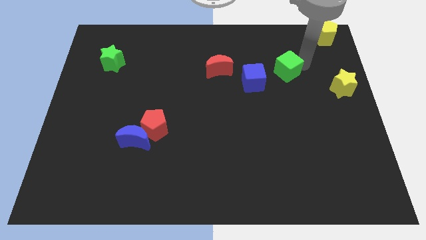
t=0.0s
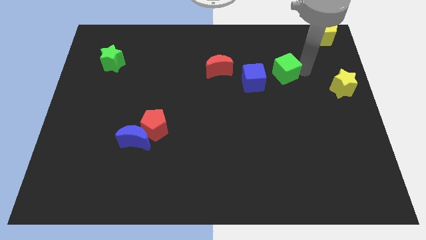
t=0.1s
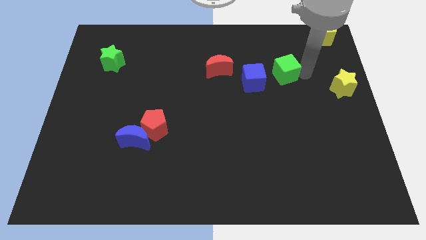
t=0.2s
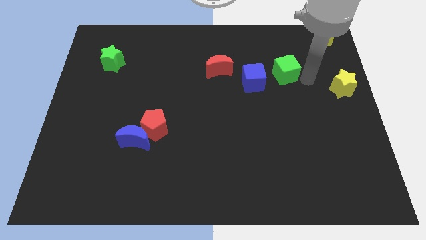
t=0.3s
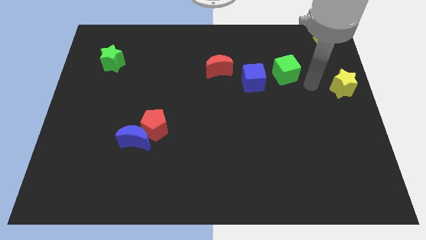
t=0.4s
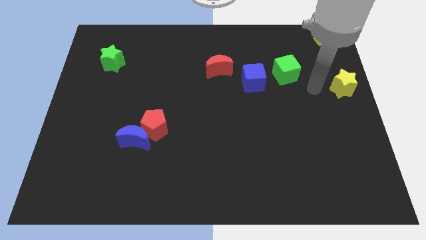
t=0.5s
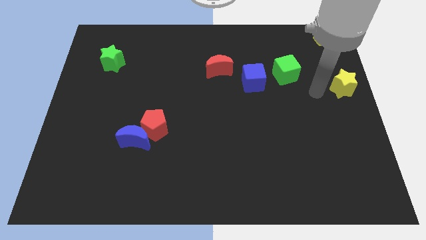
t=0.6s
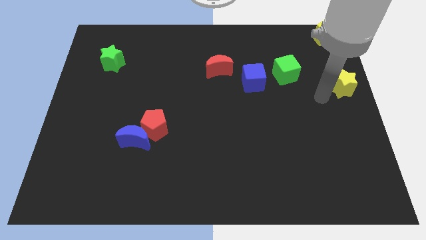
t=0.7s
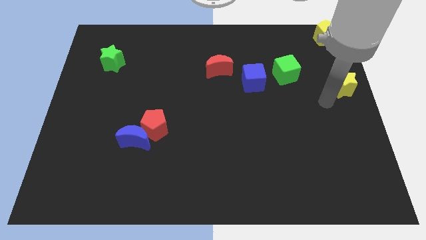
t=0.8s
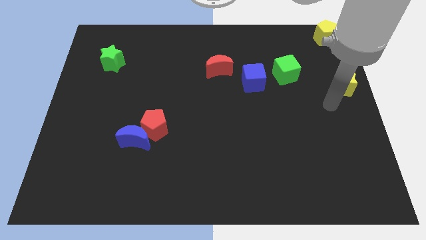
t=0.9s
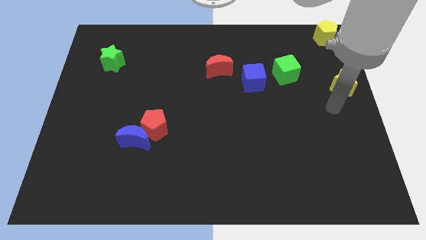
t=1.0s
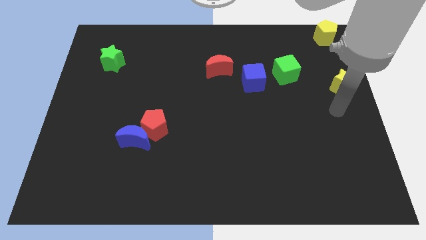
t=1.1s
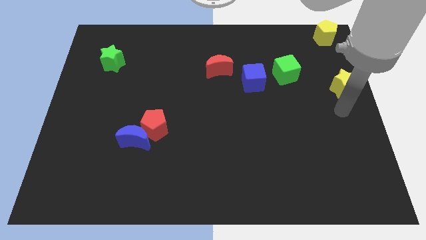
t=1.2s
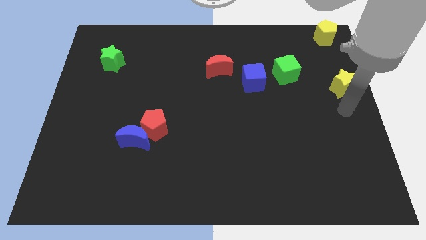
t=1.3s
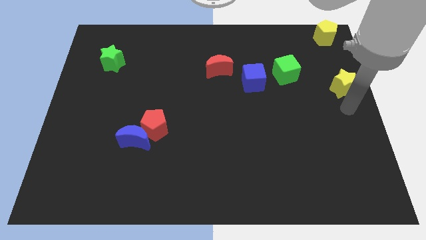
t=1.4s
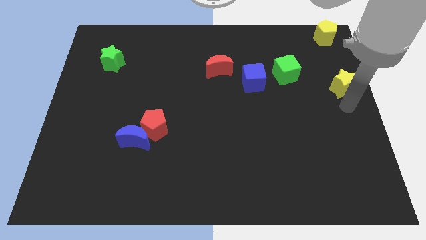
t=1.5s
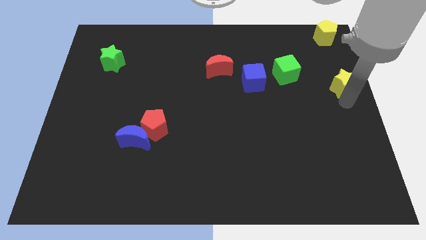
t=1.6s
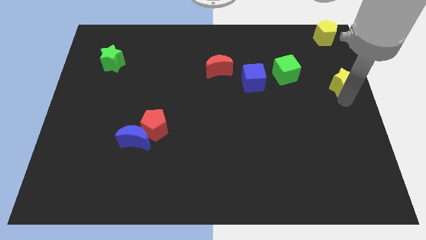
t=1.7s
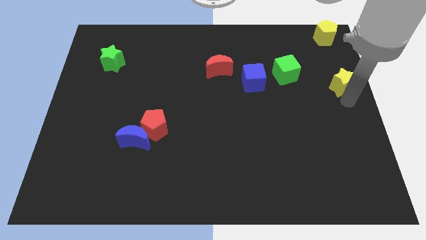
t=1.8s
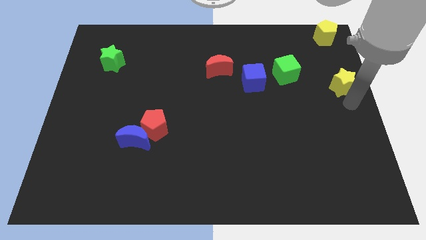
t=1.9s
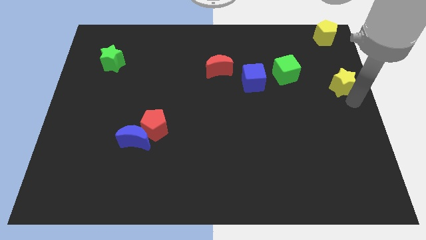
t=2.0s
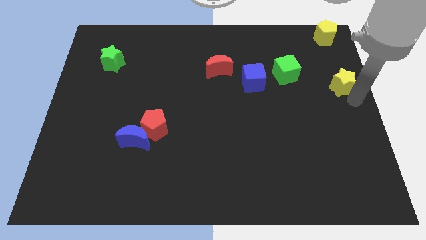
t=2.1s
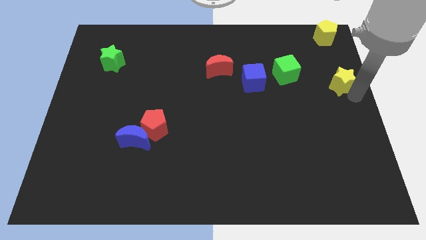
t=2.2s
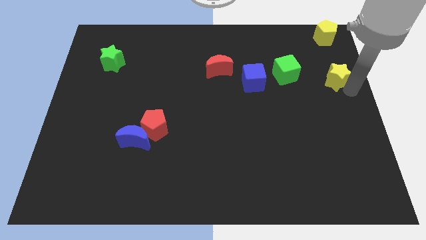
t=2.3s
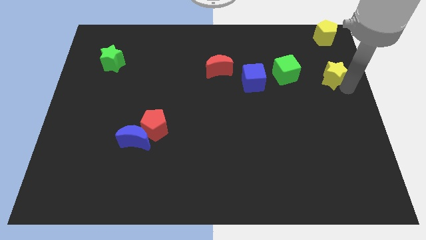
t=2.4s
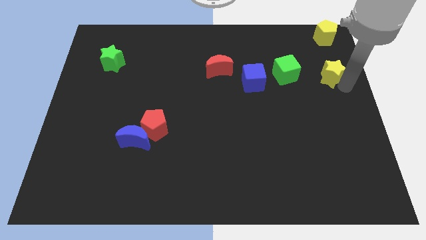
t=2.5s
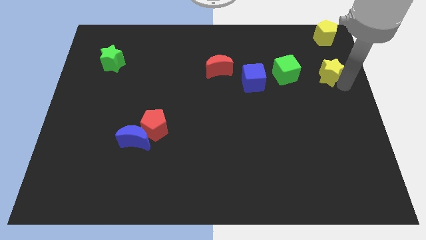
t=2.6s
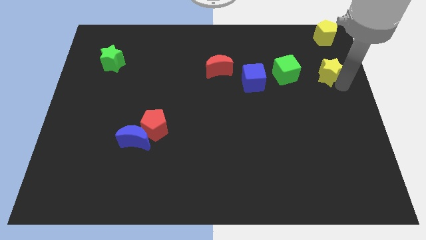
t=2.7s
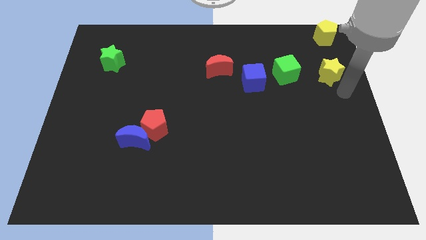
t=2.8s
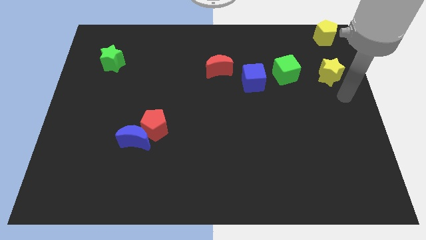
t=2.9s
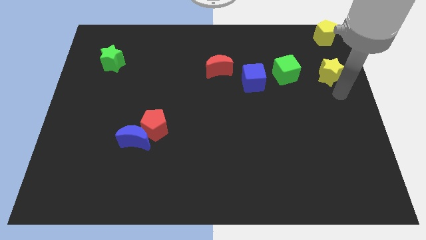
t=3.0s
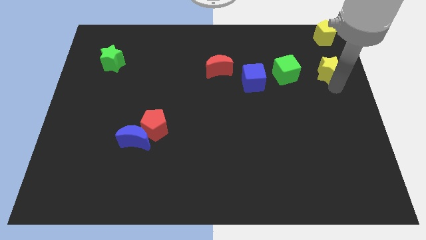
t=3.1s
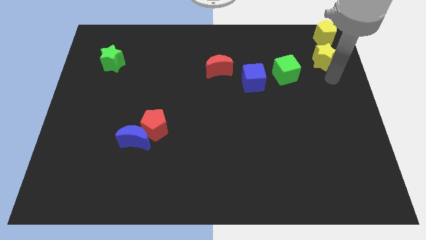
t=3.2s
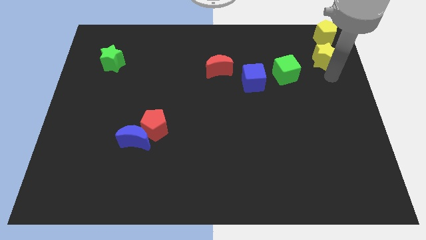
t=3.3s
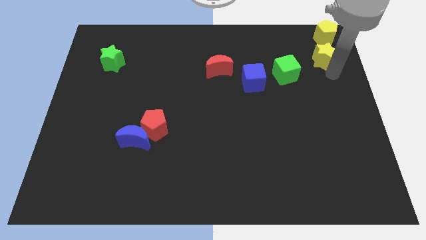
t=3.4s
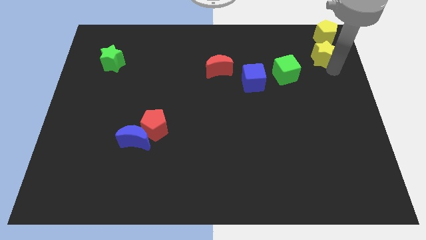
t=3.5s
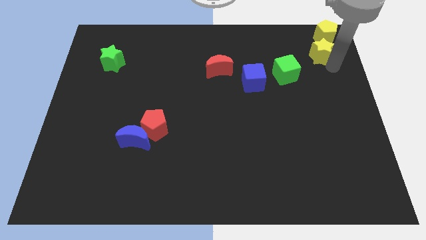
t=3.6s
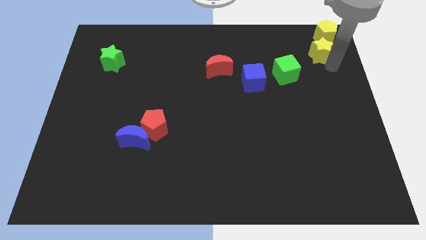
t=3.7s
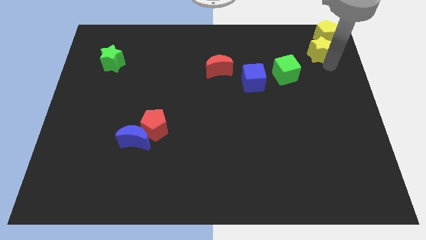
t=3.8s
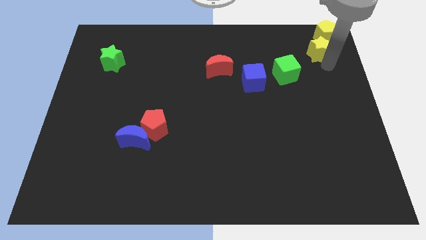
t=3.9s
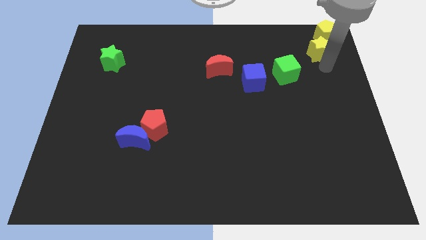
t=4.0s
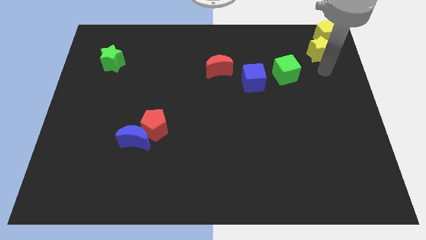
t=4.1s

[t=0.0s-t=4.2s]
place yellow star below yellow pentagon

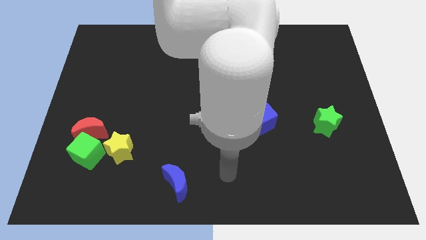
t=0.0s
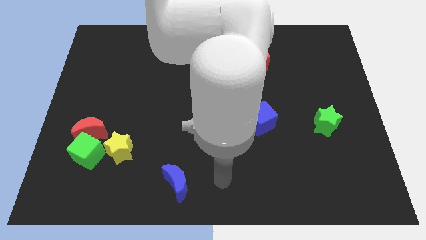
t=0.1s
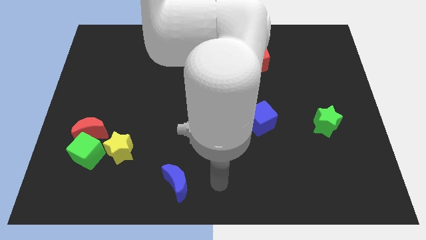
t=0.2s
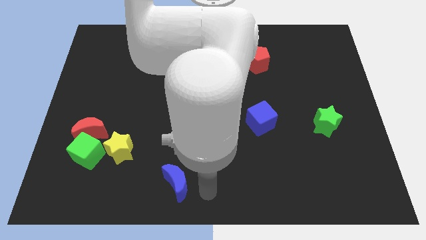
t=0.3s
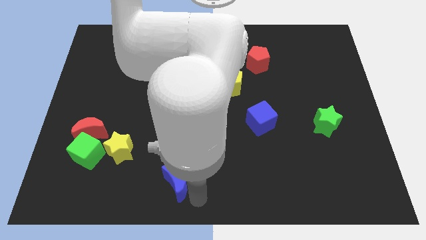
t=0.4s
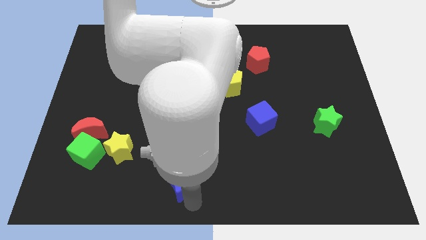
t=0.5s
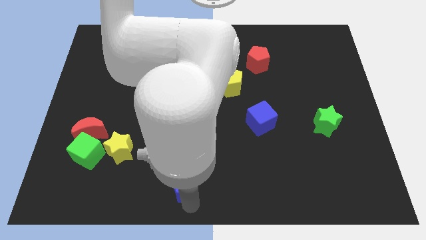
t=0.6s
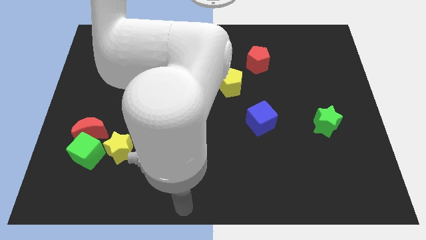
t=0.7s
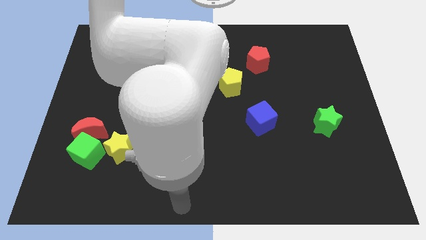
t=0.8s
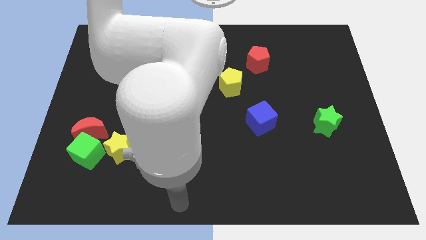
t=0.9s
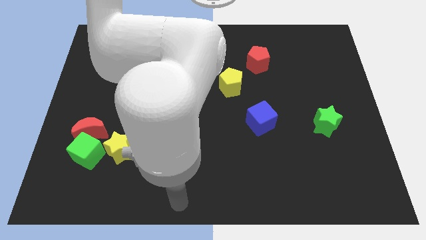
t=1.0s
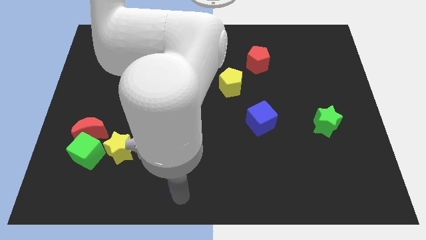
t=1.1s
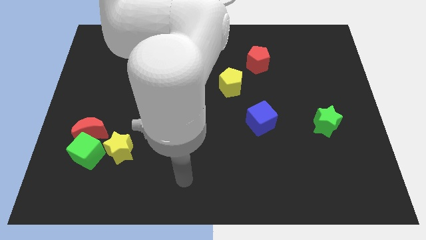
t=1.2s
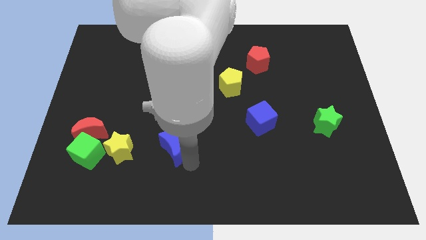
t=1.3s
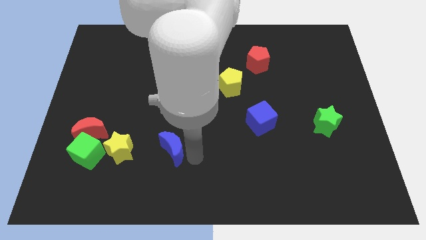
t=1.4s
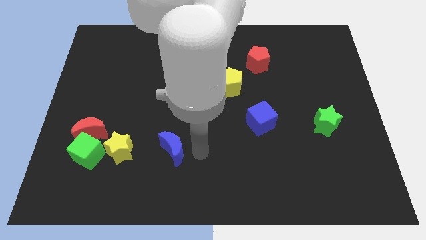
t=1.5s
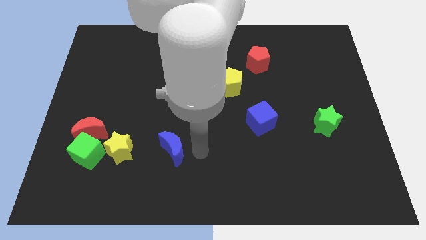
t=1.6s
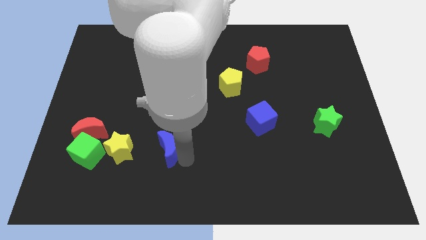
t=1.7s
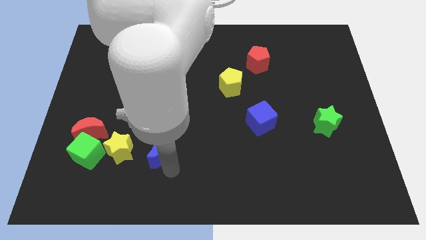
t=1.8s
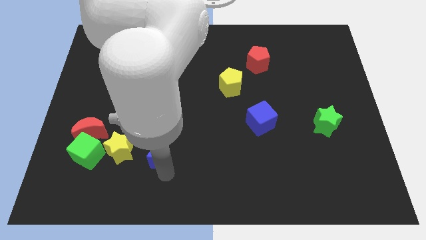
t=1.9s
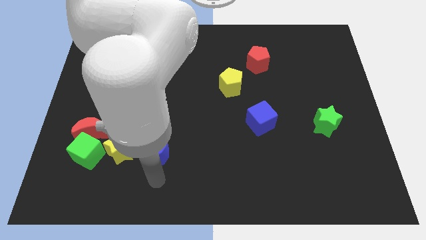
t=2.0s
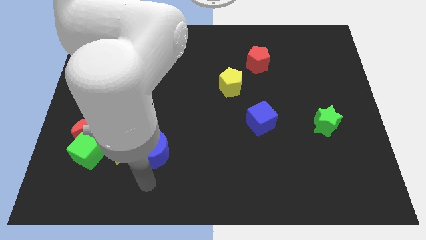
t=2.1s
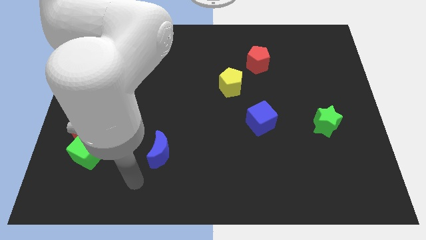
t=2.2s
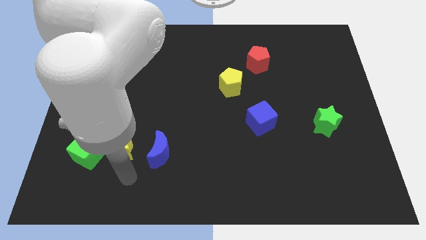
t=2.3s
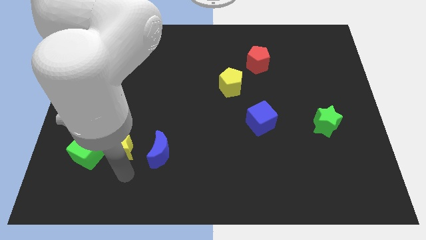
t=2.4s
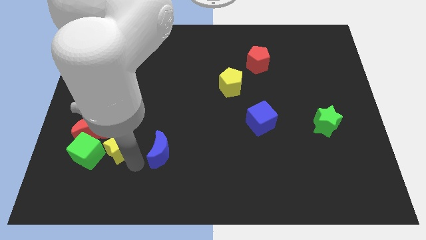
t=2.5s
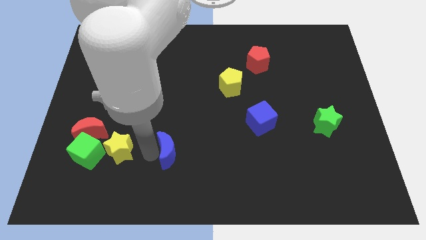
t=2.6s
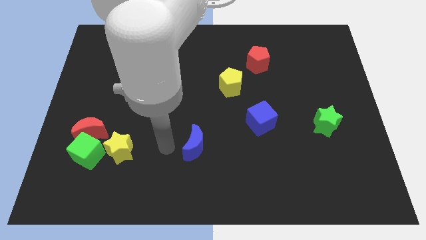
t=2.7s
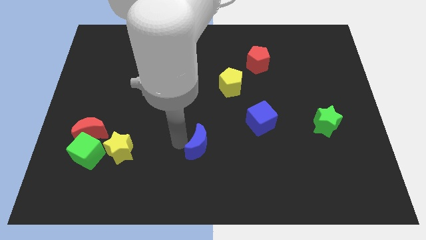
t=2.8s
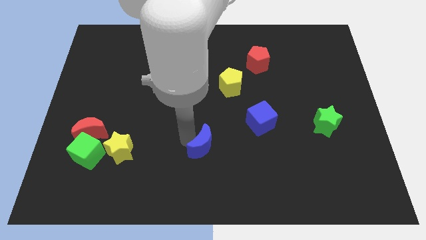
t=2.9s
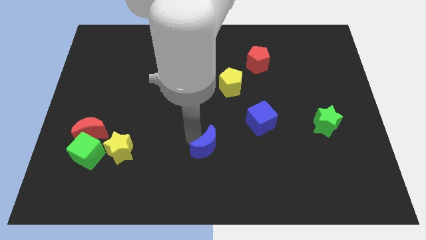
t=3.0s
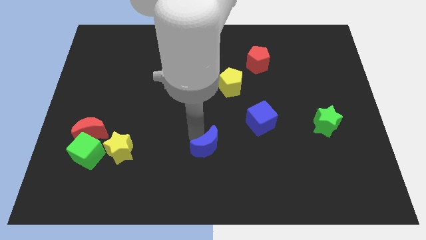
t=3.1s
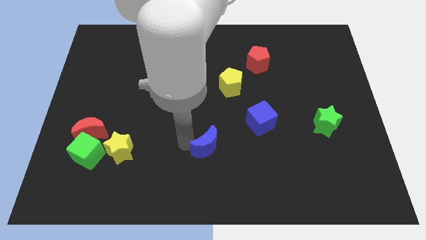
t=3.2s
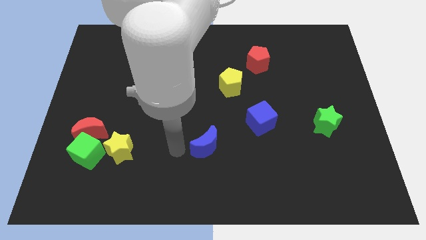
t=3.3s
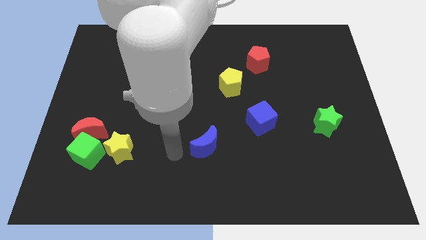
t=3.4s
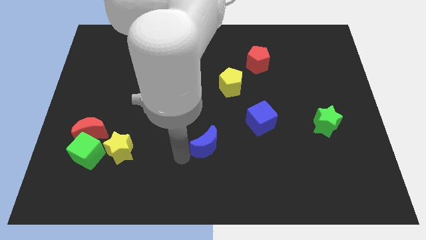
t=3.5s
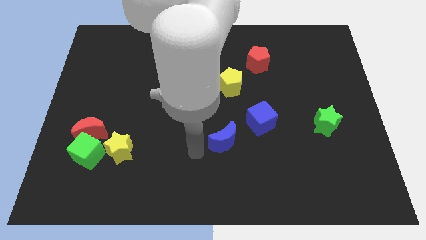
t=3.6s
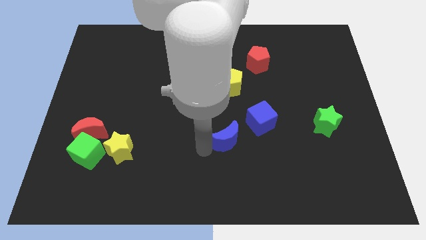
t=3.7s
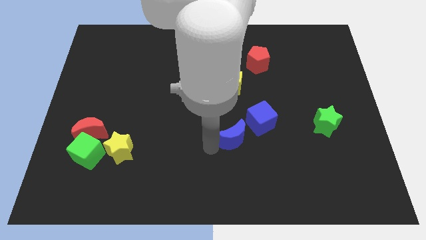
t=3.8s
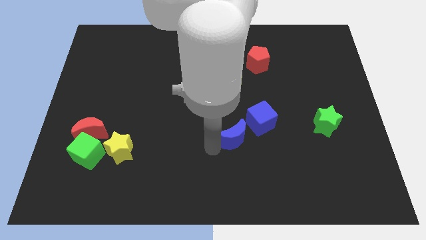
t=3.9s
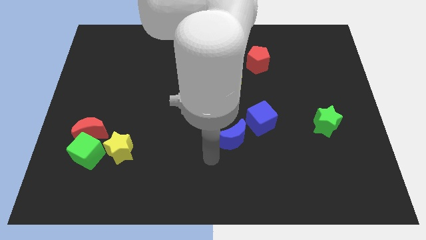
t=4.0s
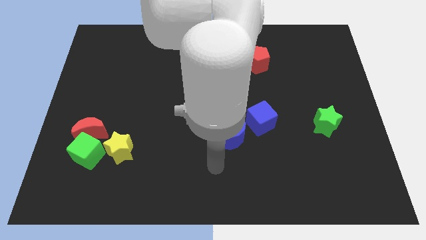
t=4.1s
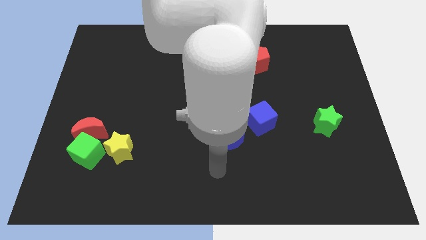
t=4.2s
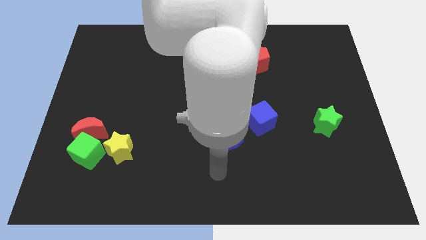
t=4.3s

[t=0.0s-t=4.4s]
place the blue moon diagonal to blue cube

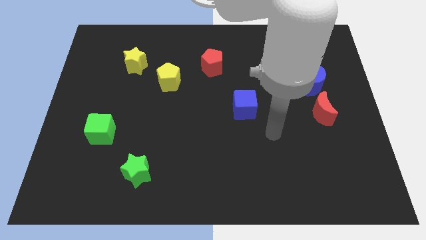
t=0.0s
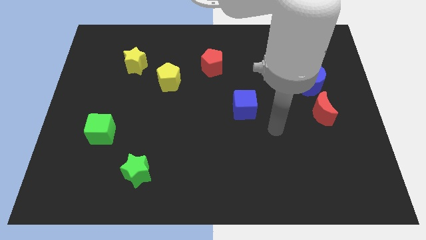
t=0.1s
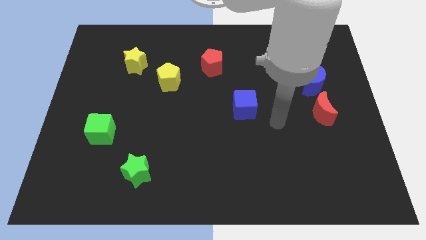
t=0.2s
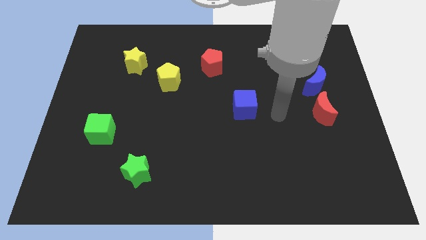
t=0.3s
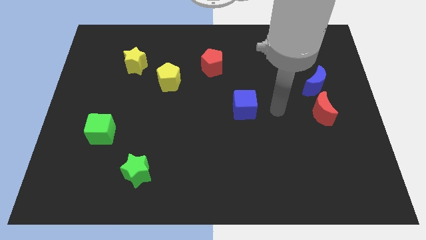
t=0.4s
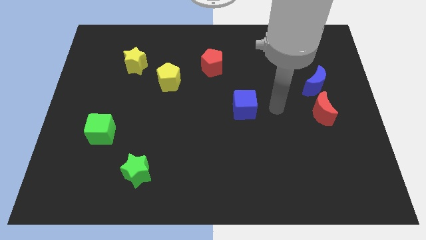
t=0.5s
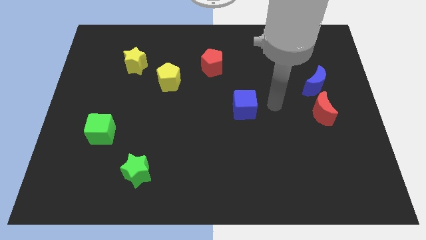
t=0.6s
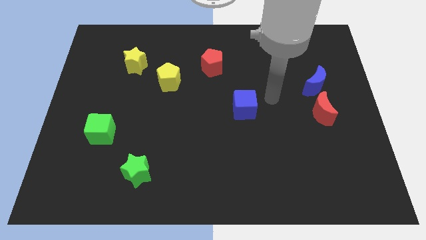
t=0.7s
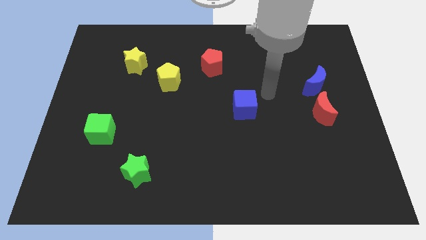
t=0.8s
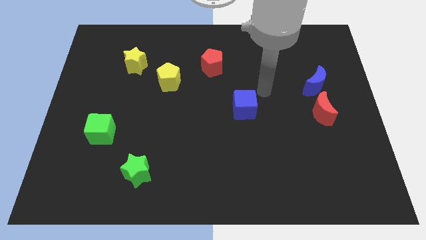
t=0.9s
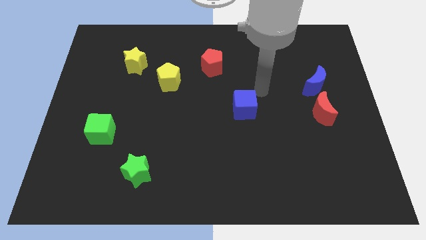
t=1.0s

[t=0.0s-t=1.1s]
point the arm at the top right of the blue cube
